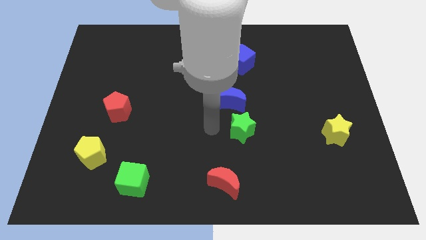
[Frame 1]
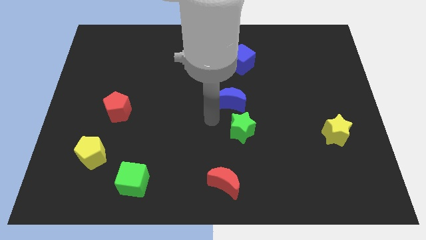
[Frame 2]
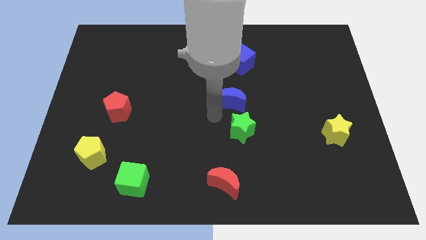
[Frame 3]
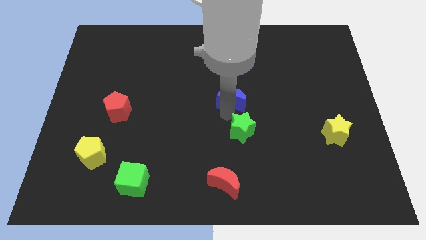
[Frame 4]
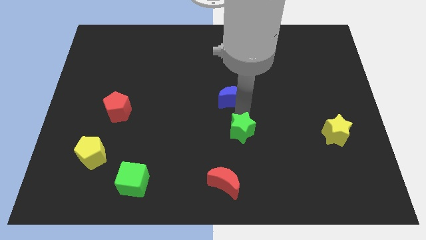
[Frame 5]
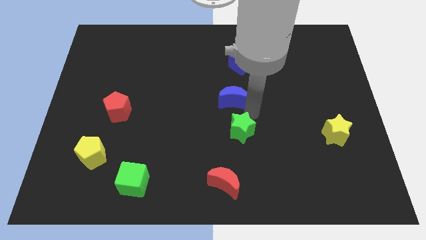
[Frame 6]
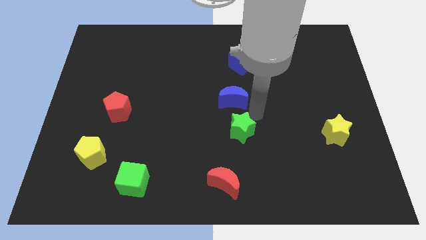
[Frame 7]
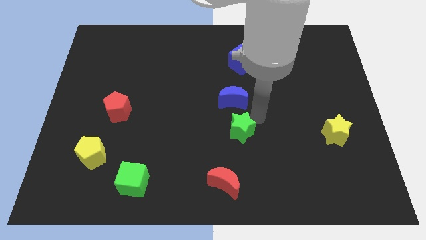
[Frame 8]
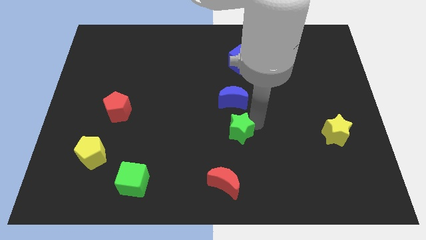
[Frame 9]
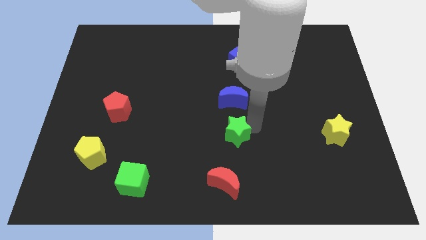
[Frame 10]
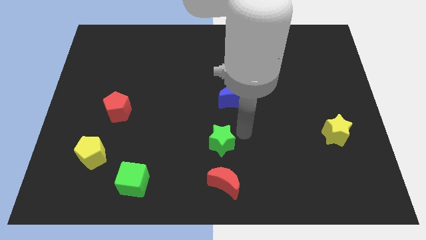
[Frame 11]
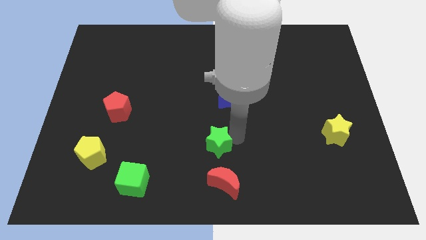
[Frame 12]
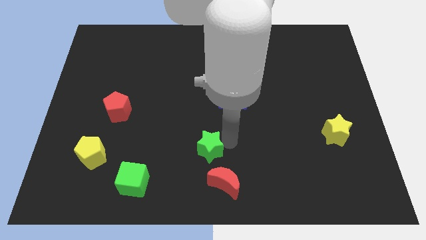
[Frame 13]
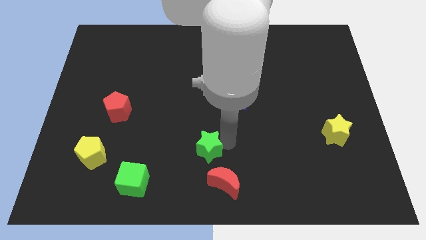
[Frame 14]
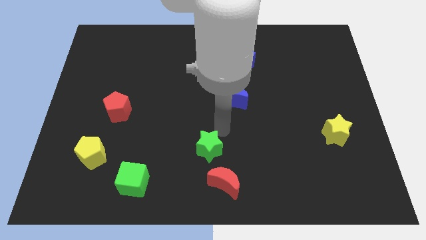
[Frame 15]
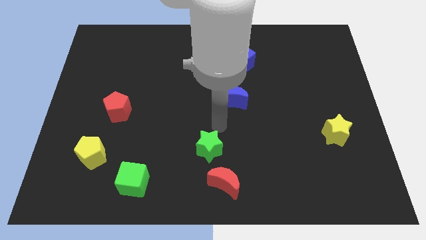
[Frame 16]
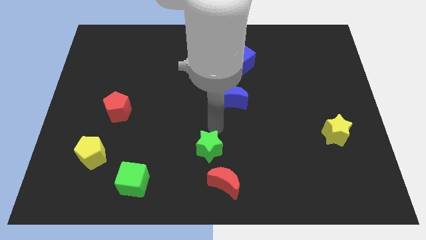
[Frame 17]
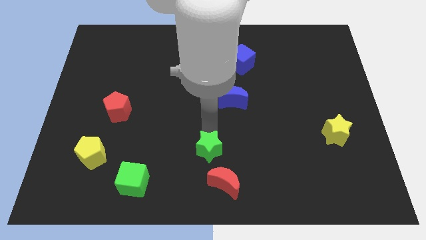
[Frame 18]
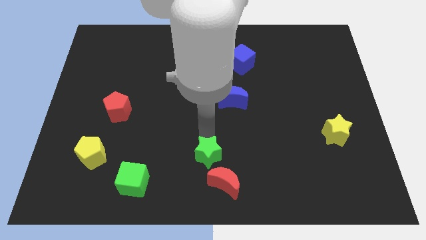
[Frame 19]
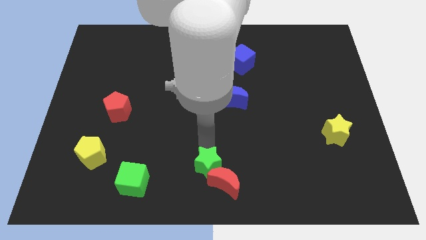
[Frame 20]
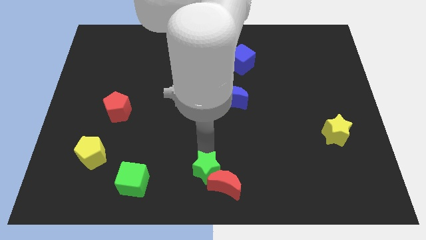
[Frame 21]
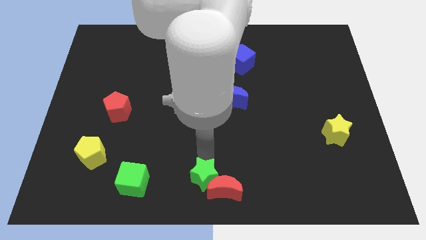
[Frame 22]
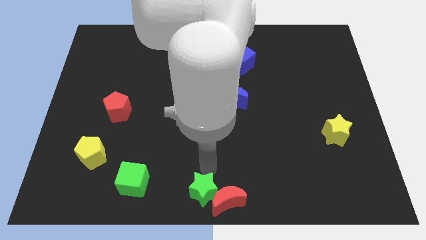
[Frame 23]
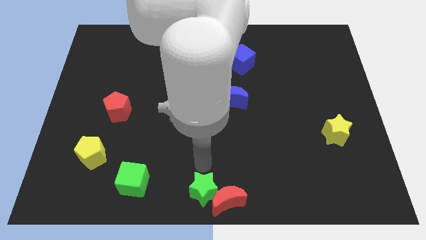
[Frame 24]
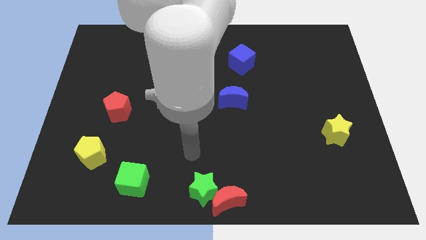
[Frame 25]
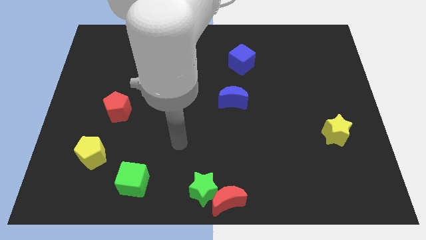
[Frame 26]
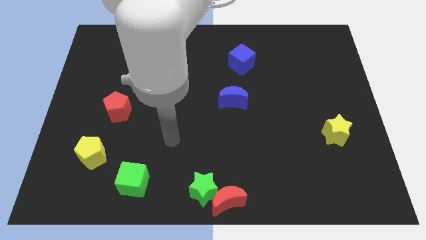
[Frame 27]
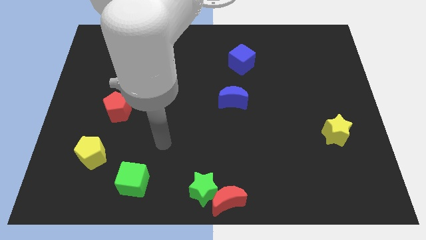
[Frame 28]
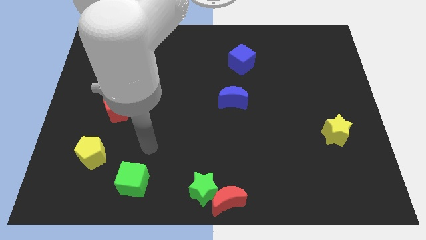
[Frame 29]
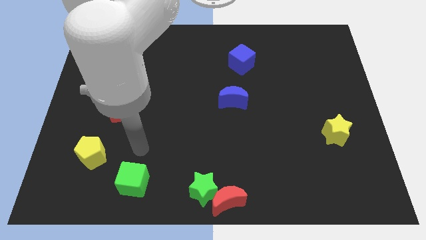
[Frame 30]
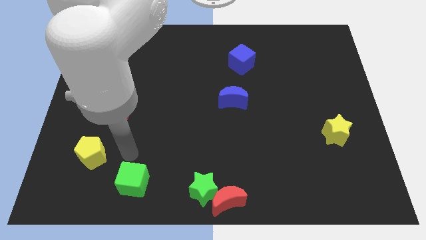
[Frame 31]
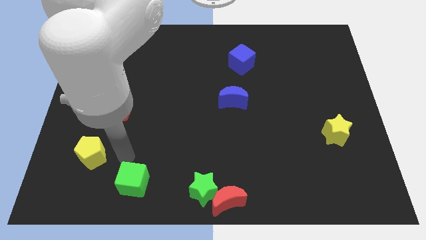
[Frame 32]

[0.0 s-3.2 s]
push the green star into the red moon

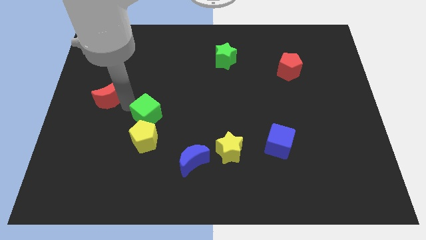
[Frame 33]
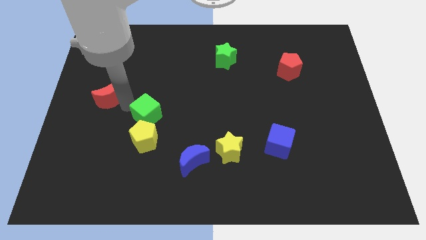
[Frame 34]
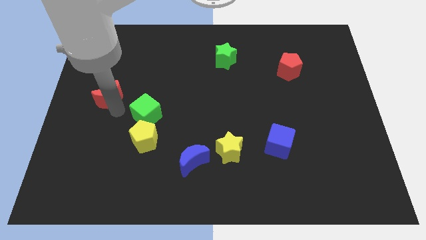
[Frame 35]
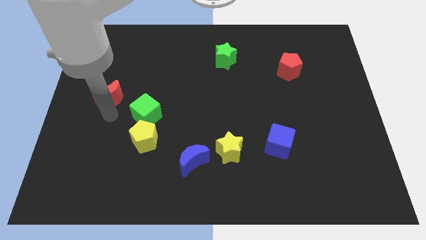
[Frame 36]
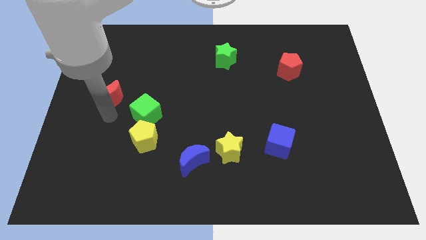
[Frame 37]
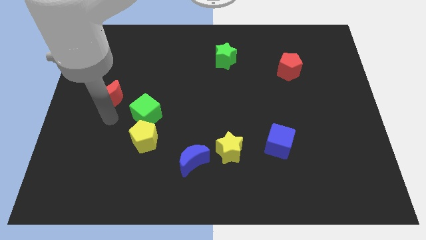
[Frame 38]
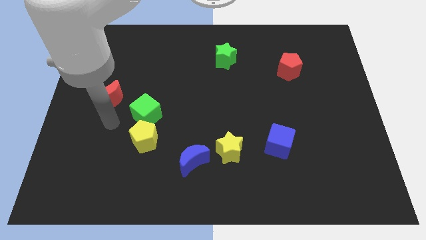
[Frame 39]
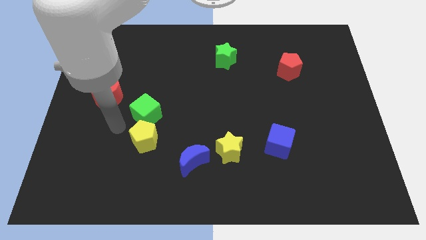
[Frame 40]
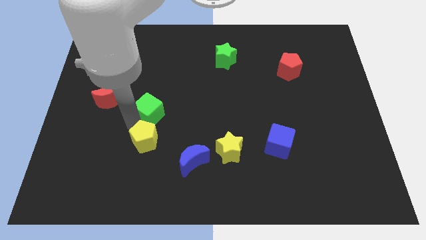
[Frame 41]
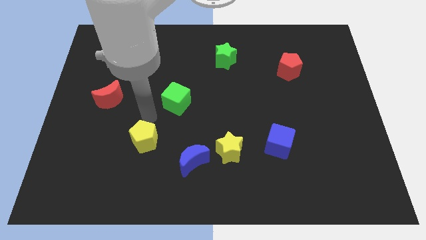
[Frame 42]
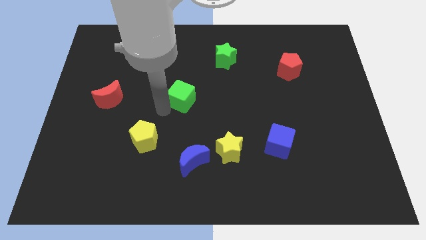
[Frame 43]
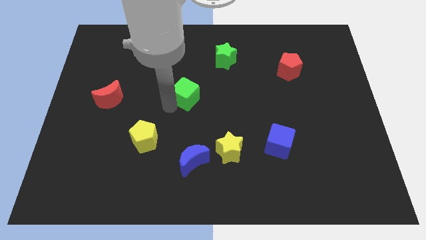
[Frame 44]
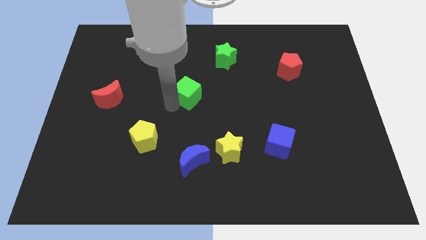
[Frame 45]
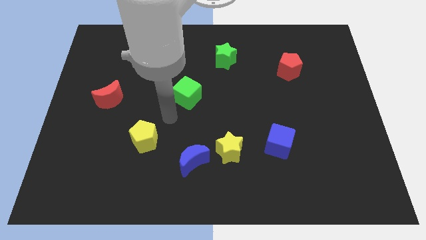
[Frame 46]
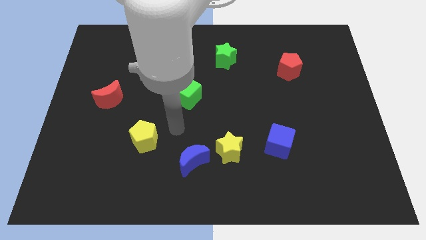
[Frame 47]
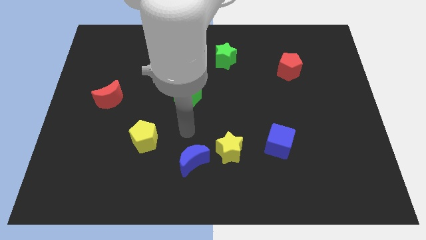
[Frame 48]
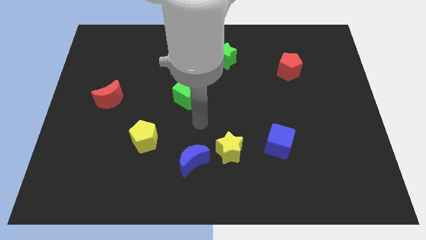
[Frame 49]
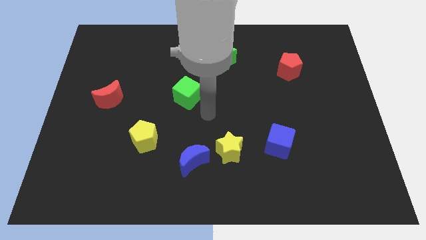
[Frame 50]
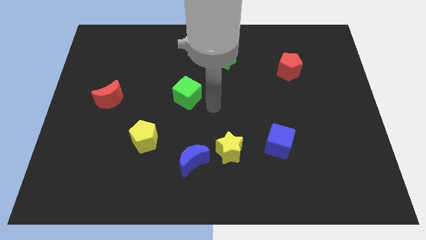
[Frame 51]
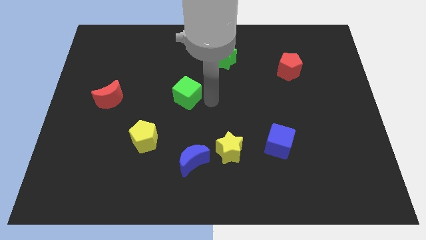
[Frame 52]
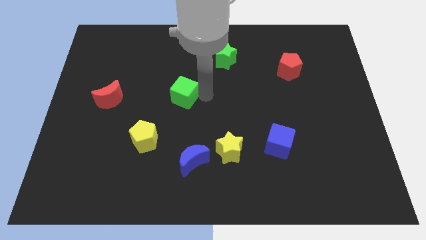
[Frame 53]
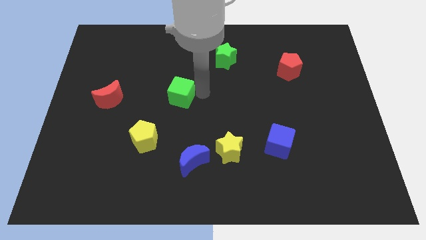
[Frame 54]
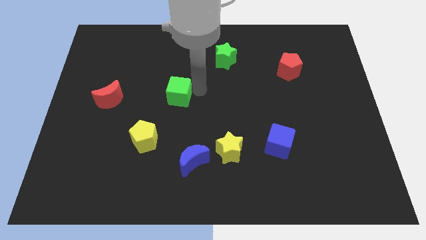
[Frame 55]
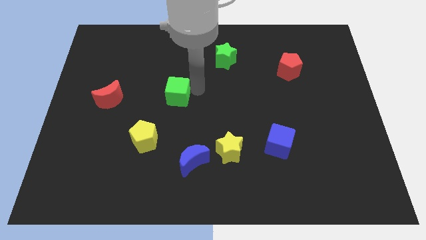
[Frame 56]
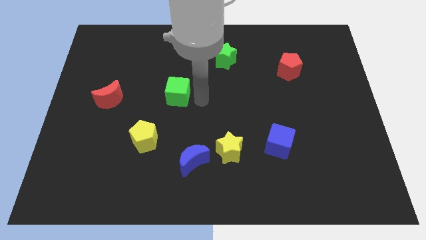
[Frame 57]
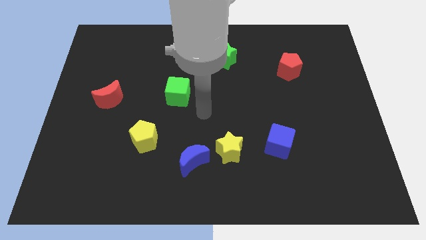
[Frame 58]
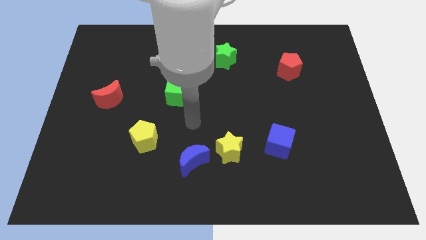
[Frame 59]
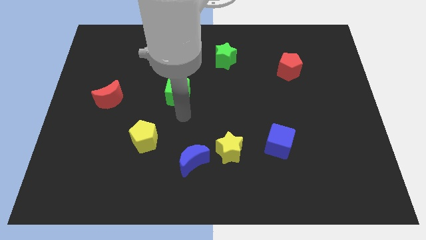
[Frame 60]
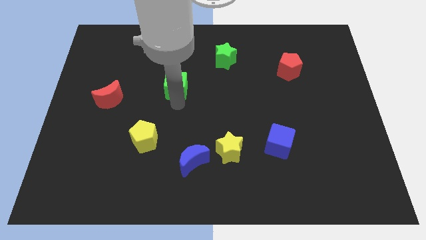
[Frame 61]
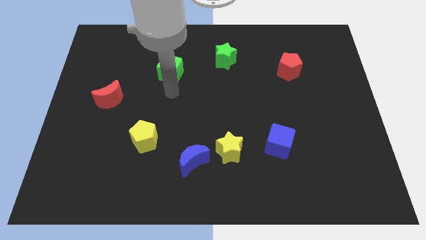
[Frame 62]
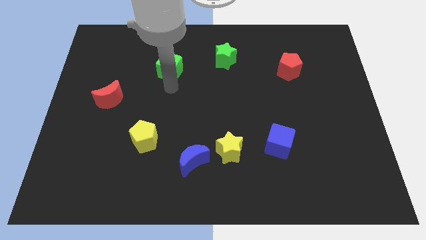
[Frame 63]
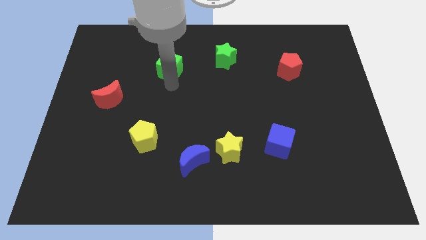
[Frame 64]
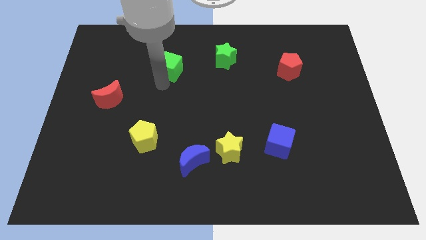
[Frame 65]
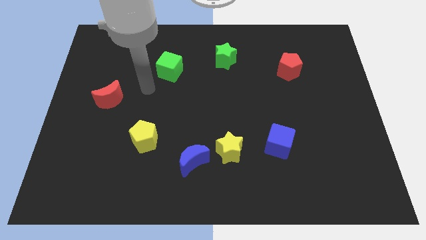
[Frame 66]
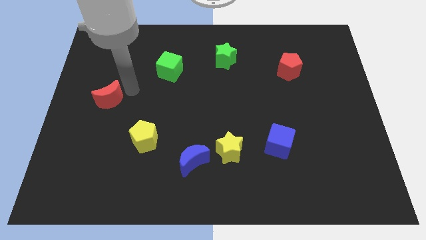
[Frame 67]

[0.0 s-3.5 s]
place the green cube to the left of the green star

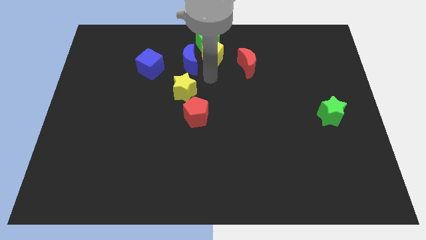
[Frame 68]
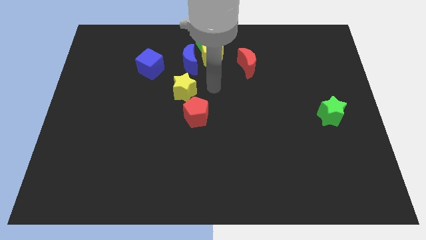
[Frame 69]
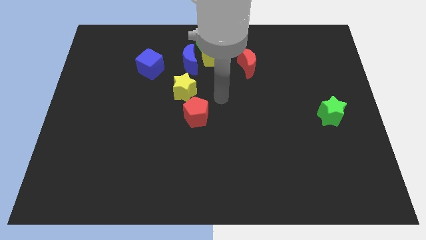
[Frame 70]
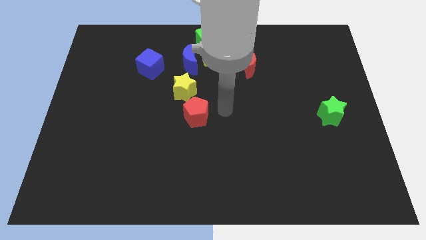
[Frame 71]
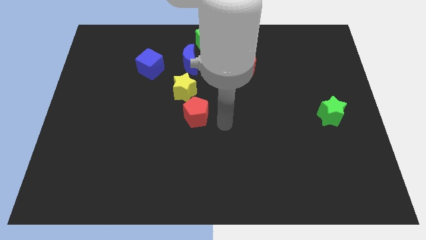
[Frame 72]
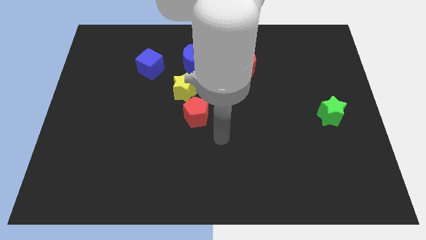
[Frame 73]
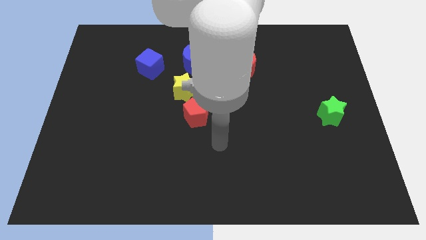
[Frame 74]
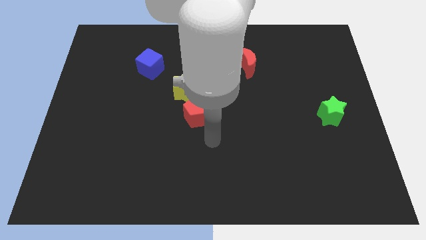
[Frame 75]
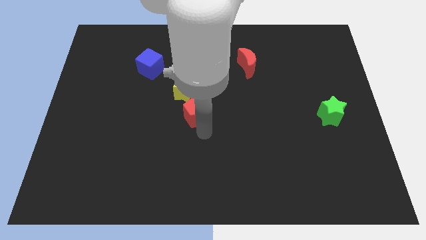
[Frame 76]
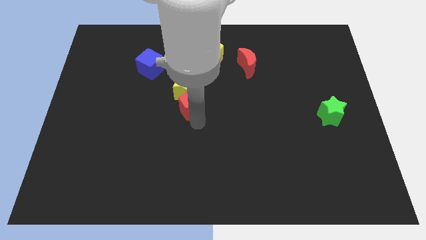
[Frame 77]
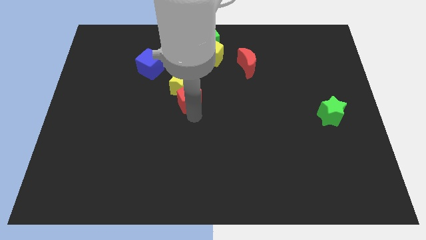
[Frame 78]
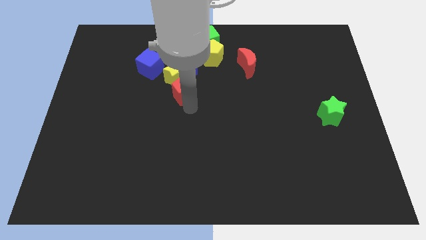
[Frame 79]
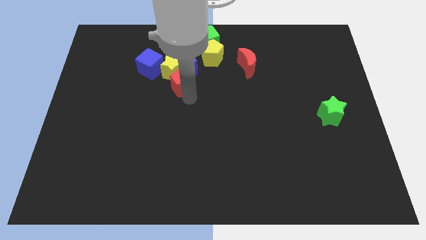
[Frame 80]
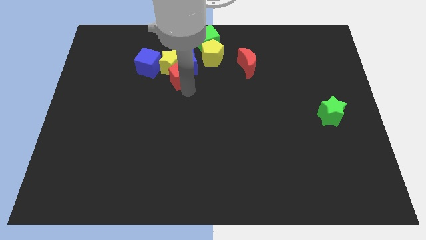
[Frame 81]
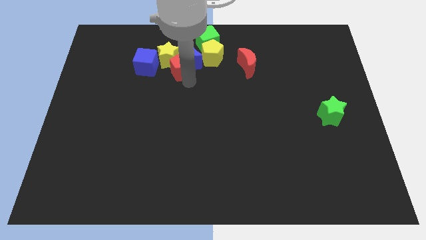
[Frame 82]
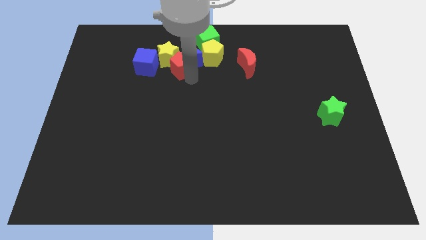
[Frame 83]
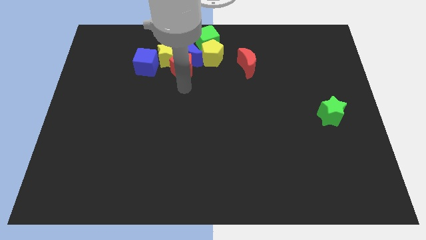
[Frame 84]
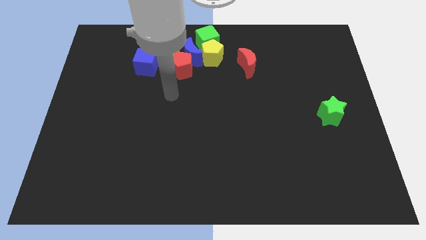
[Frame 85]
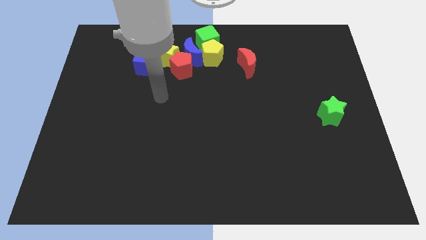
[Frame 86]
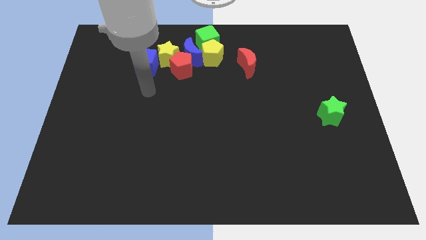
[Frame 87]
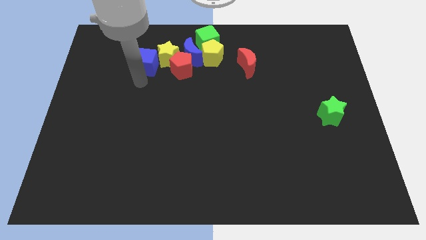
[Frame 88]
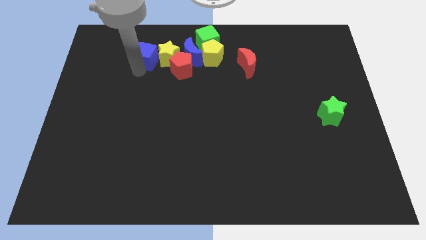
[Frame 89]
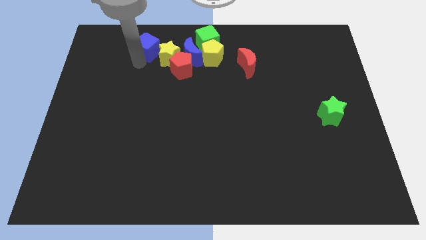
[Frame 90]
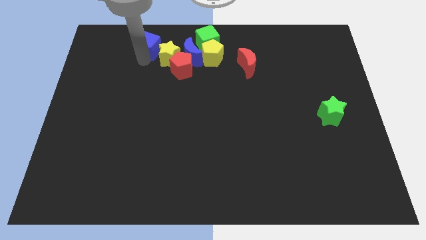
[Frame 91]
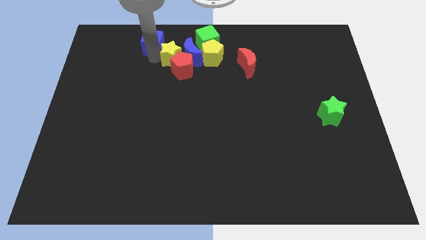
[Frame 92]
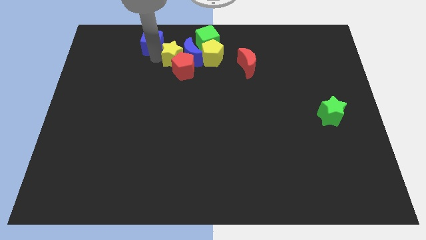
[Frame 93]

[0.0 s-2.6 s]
move group of blocks towards the top of the board
